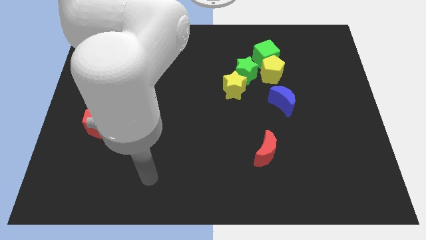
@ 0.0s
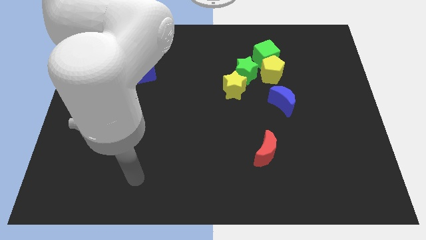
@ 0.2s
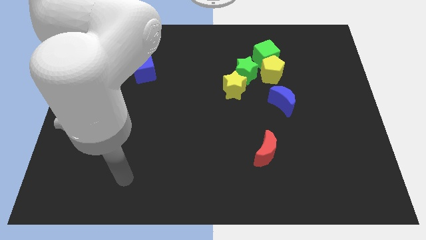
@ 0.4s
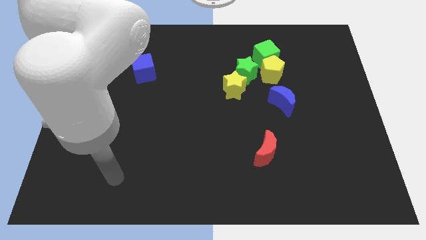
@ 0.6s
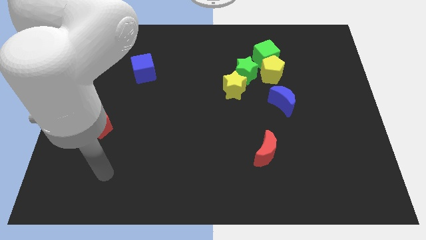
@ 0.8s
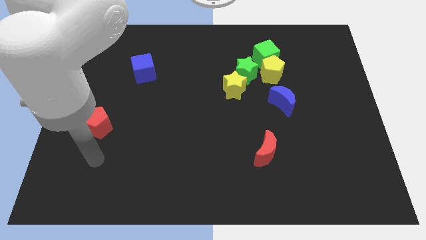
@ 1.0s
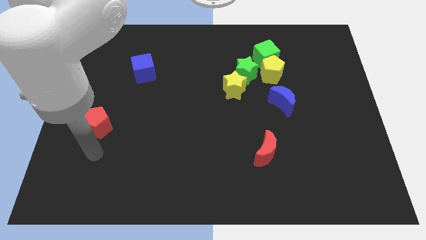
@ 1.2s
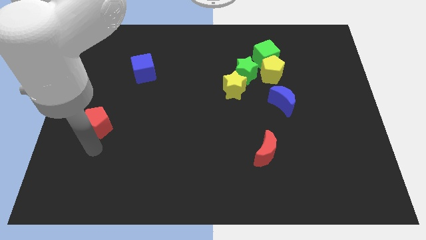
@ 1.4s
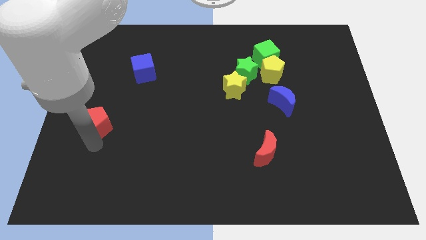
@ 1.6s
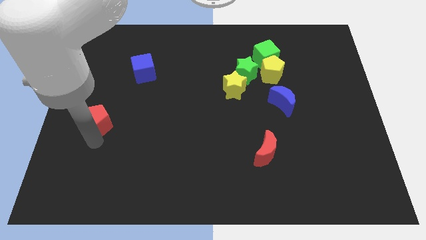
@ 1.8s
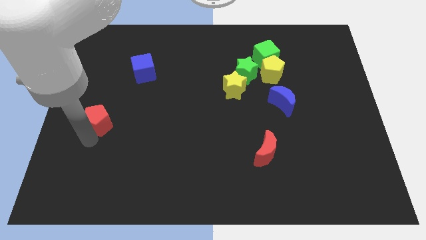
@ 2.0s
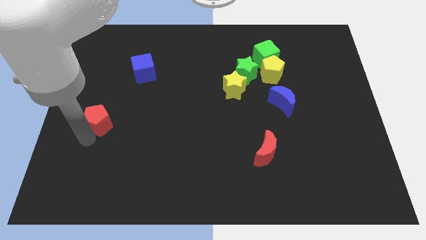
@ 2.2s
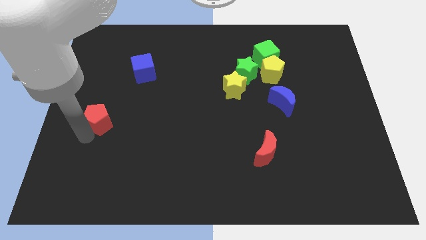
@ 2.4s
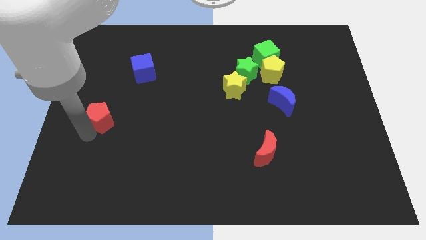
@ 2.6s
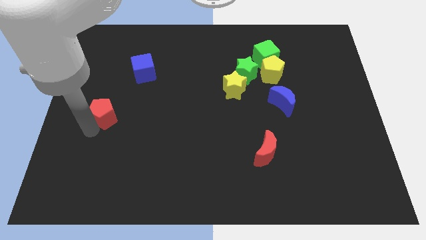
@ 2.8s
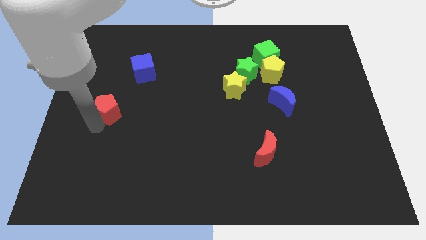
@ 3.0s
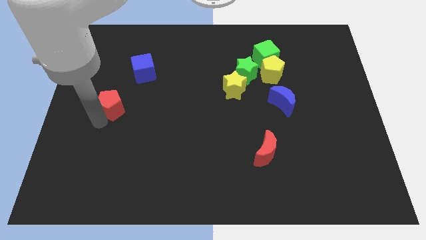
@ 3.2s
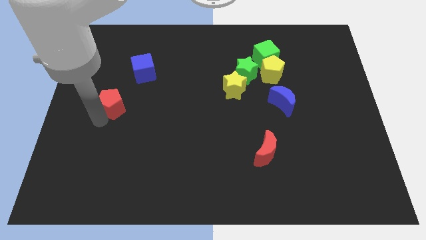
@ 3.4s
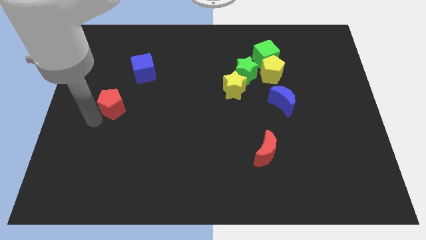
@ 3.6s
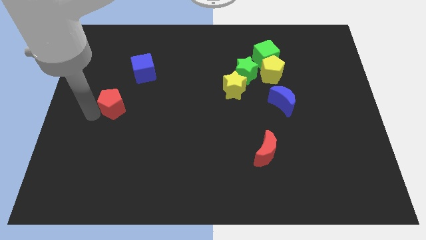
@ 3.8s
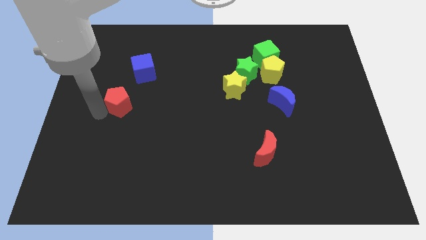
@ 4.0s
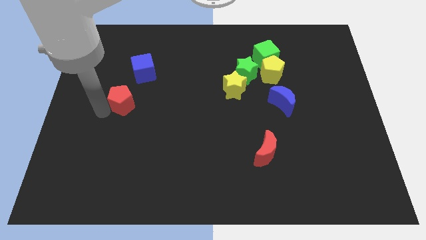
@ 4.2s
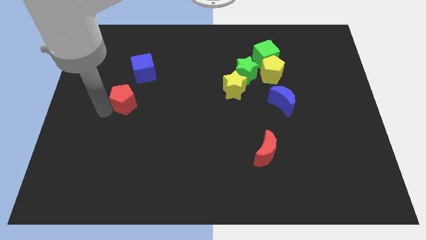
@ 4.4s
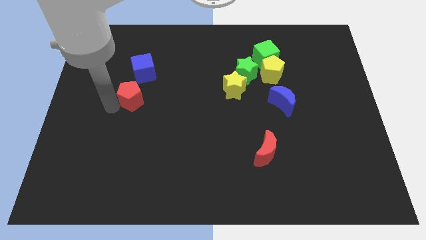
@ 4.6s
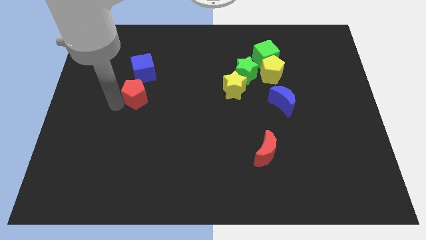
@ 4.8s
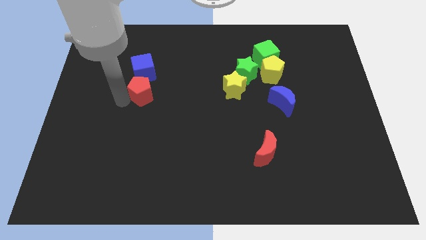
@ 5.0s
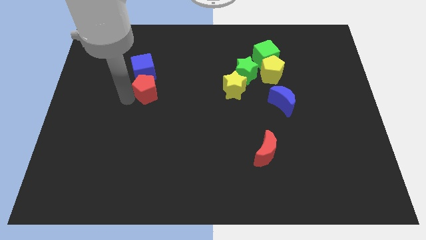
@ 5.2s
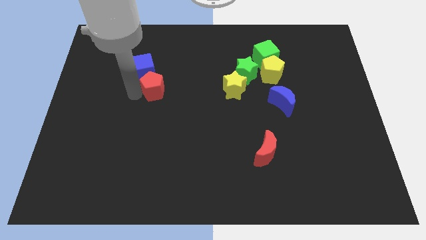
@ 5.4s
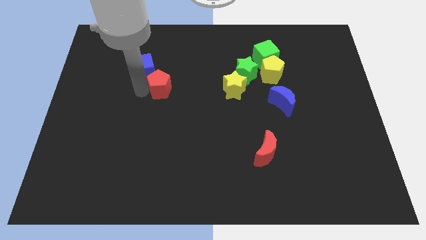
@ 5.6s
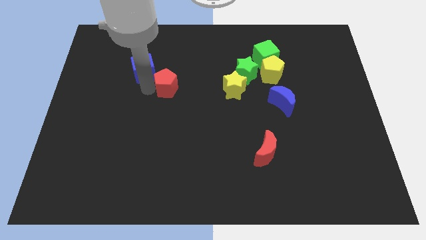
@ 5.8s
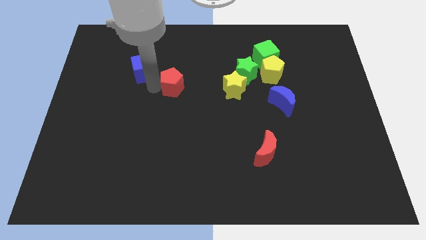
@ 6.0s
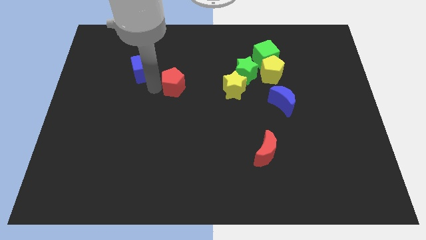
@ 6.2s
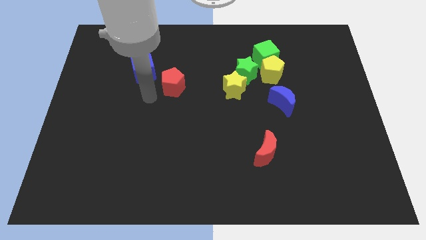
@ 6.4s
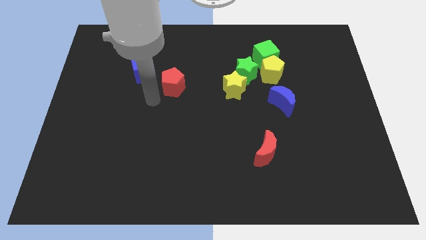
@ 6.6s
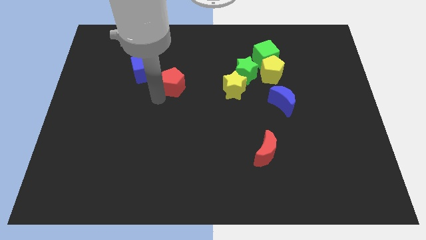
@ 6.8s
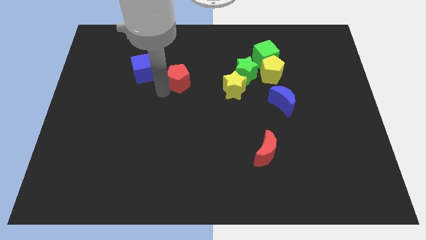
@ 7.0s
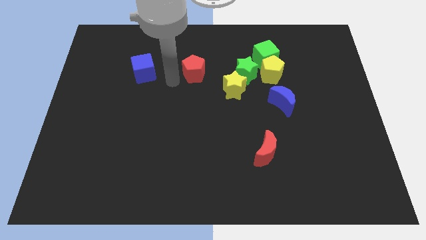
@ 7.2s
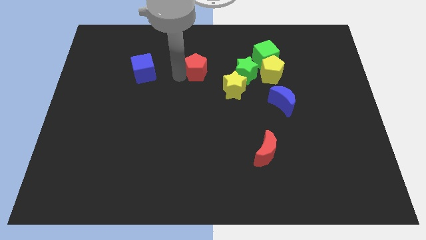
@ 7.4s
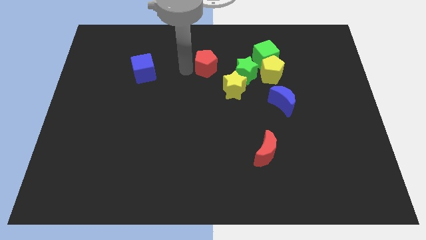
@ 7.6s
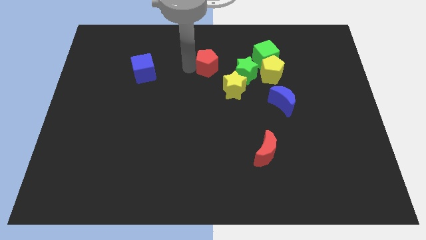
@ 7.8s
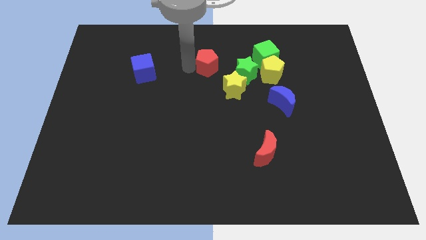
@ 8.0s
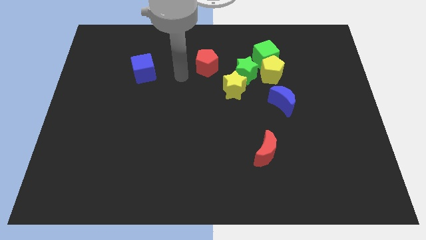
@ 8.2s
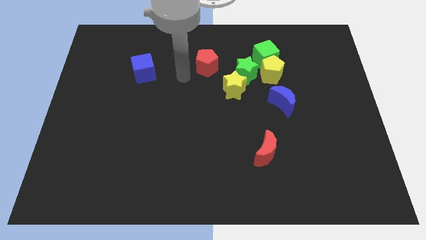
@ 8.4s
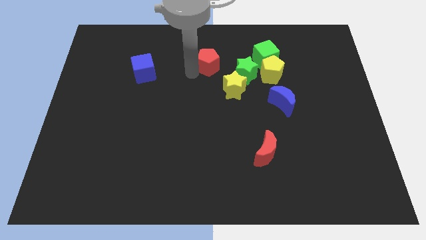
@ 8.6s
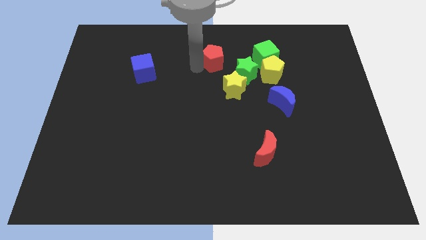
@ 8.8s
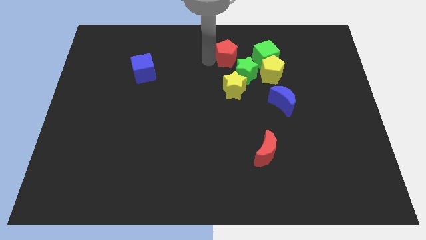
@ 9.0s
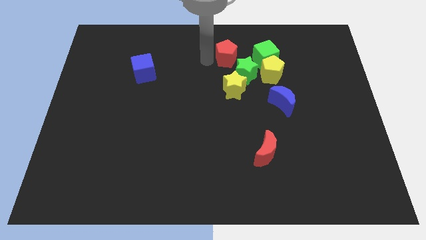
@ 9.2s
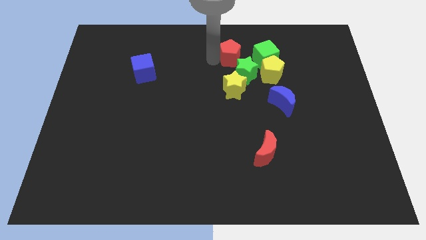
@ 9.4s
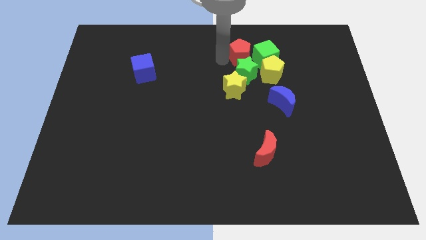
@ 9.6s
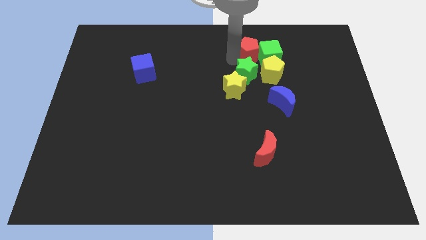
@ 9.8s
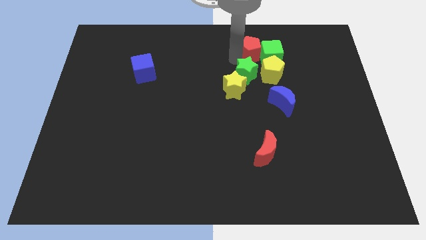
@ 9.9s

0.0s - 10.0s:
put the red pentagon next to the green cube

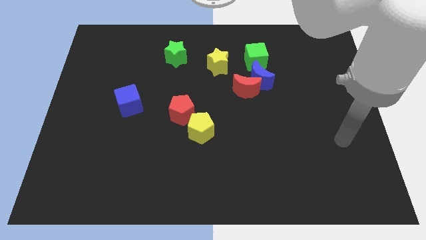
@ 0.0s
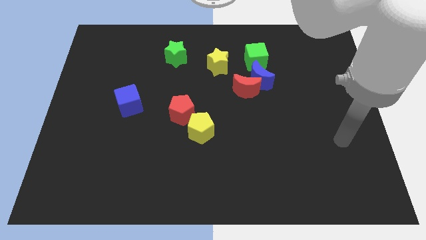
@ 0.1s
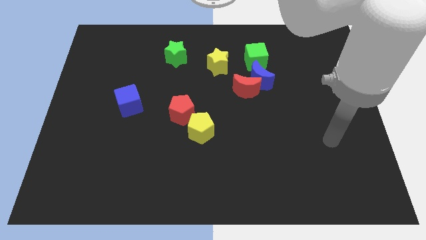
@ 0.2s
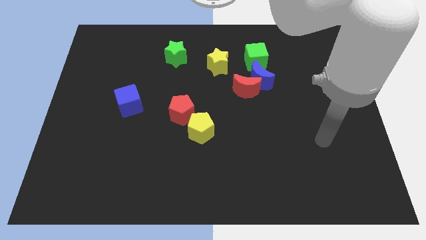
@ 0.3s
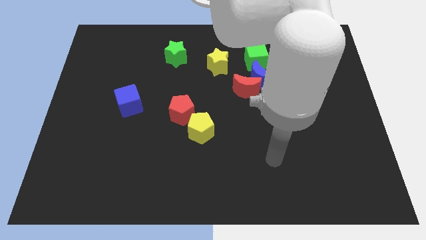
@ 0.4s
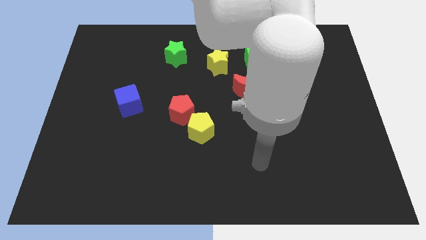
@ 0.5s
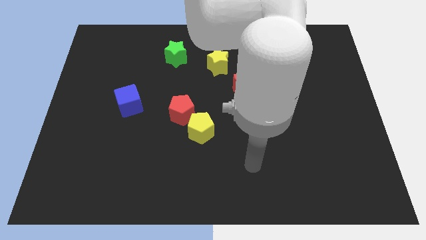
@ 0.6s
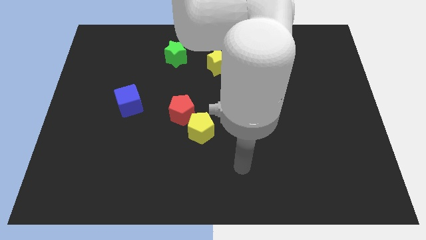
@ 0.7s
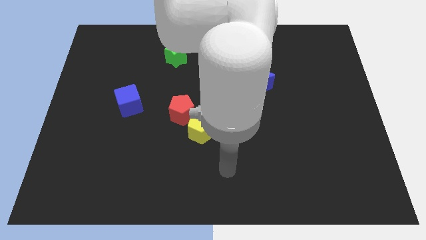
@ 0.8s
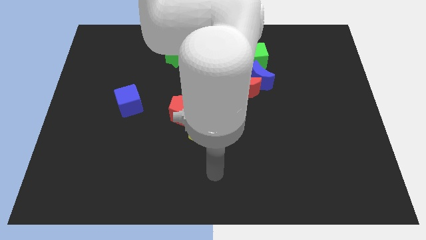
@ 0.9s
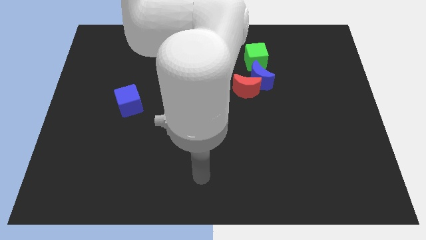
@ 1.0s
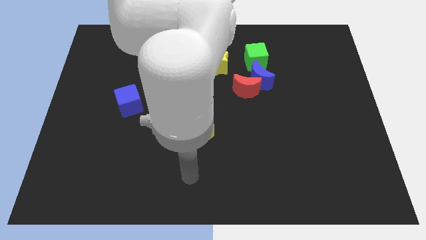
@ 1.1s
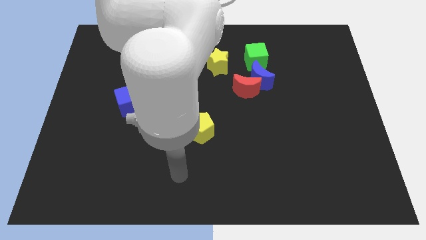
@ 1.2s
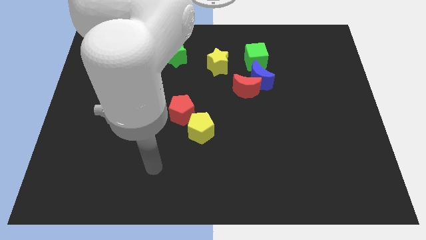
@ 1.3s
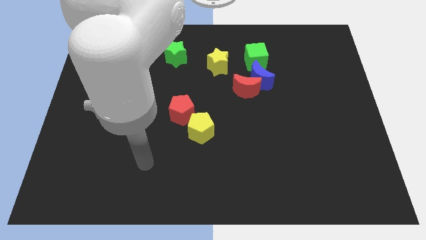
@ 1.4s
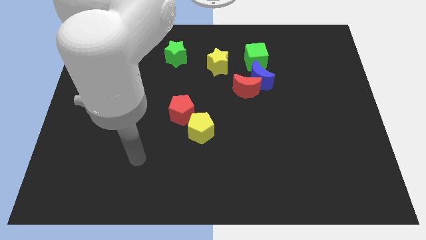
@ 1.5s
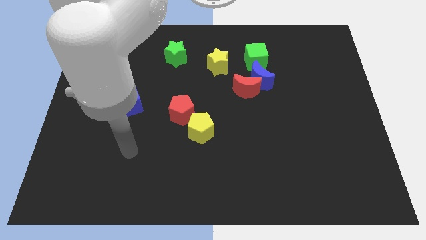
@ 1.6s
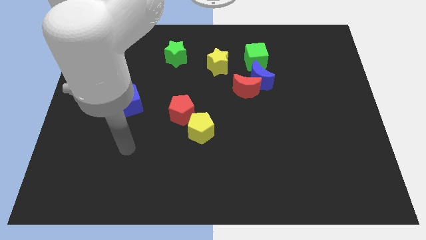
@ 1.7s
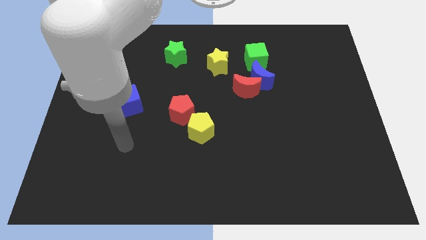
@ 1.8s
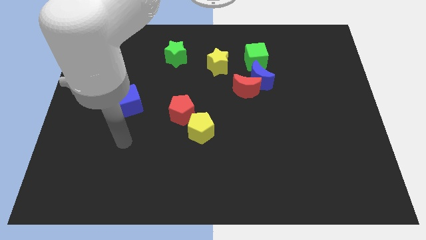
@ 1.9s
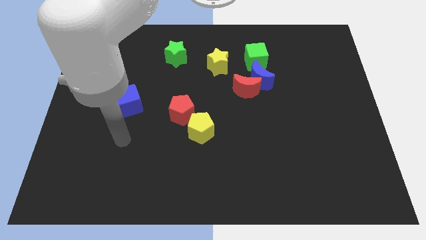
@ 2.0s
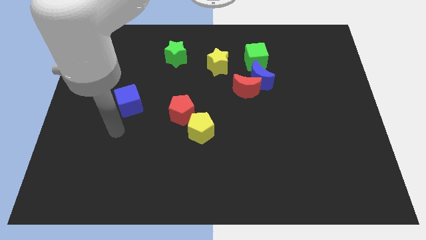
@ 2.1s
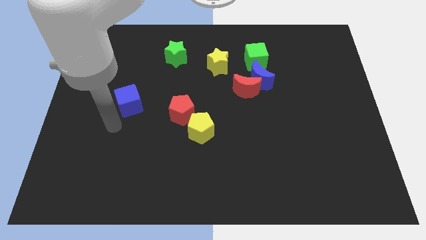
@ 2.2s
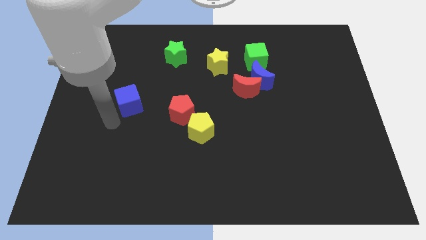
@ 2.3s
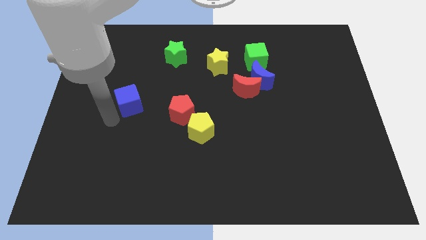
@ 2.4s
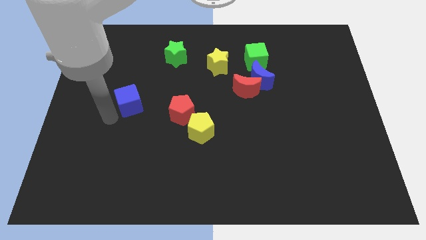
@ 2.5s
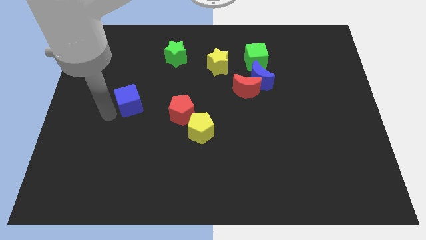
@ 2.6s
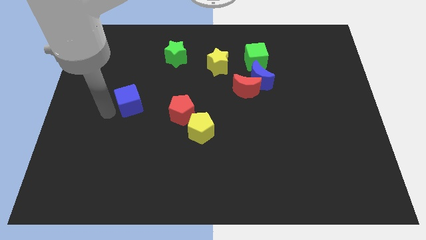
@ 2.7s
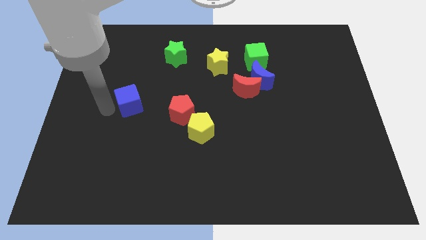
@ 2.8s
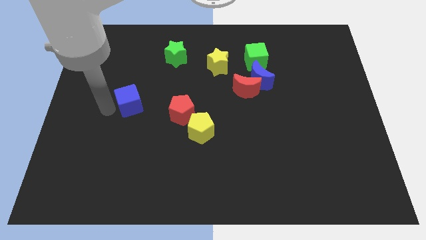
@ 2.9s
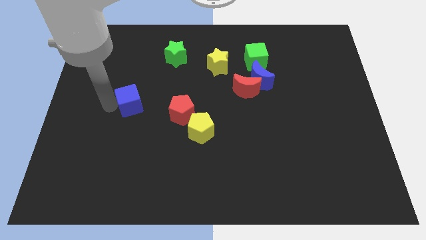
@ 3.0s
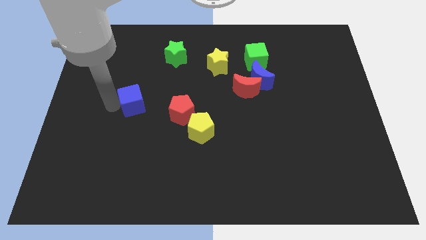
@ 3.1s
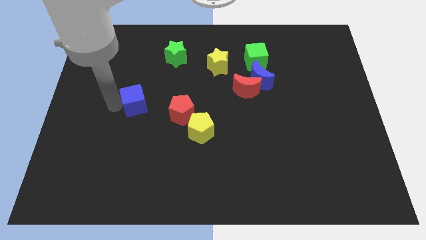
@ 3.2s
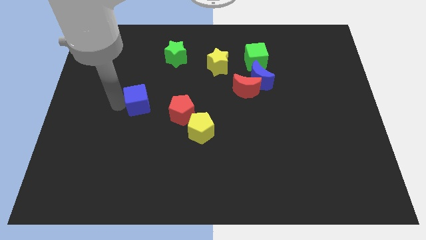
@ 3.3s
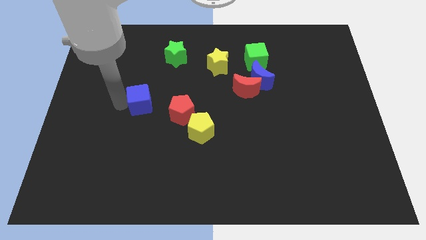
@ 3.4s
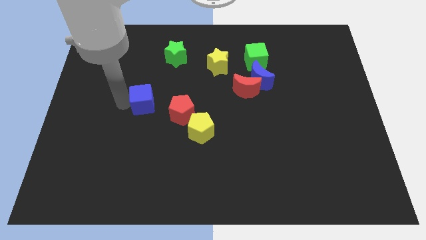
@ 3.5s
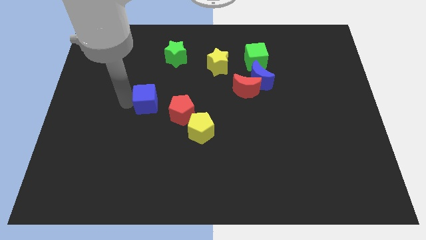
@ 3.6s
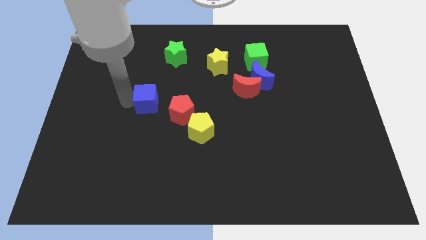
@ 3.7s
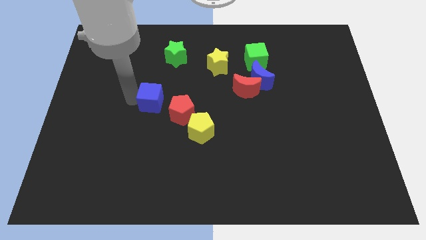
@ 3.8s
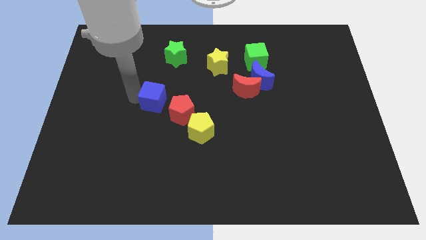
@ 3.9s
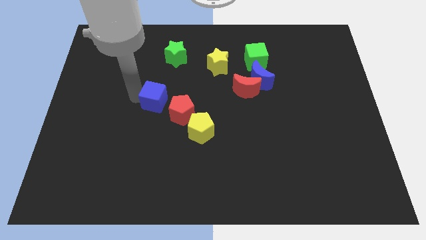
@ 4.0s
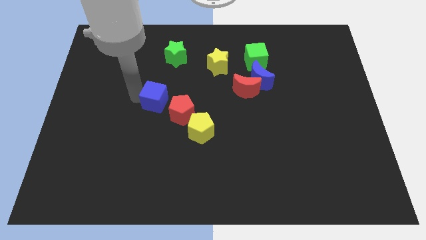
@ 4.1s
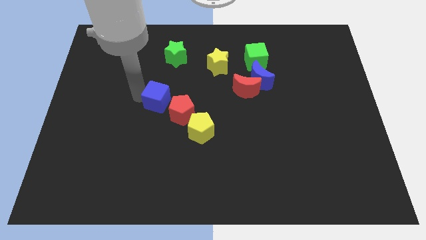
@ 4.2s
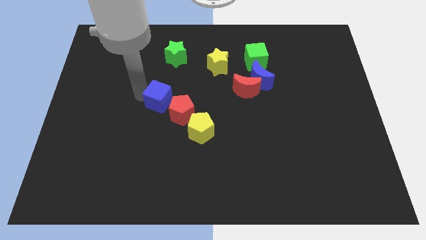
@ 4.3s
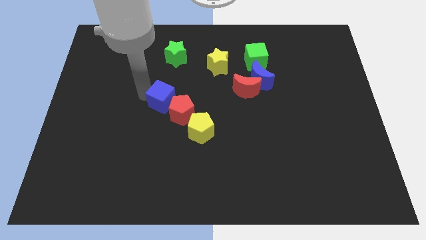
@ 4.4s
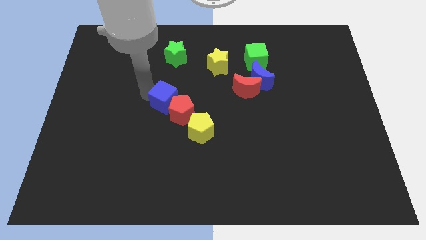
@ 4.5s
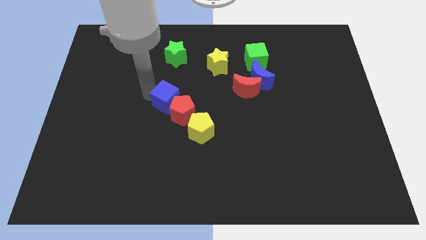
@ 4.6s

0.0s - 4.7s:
slide the blue cube towards the red pentagon
